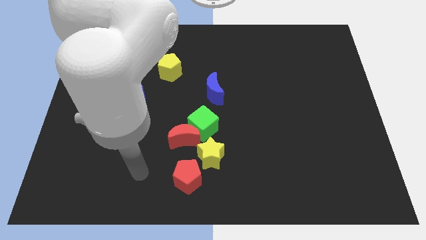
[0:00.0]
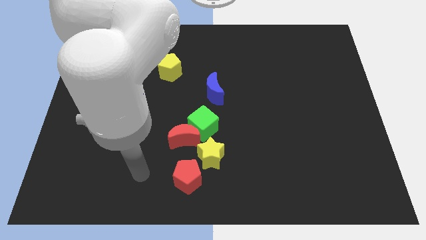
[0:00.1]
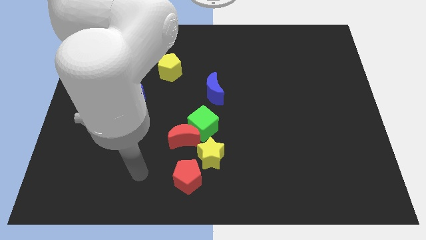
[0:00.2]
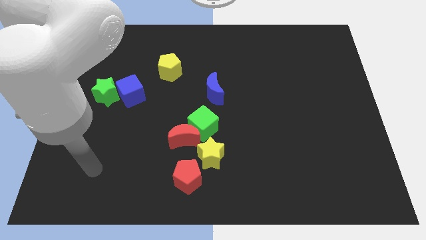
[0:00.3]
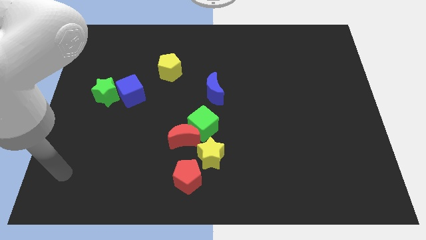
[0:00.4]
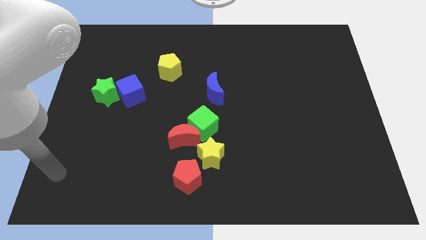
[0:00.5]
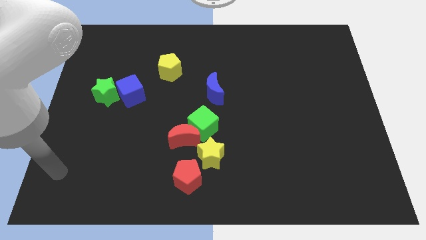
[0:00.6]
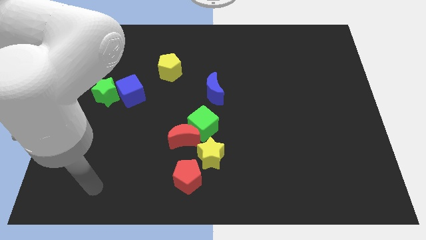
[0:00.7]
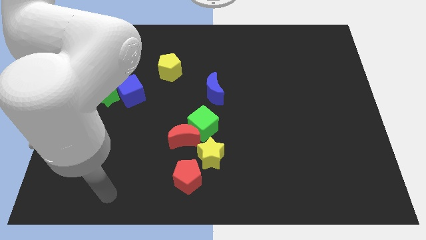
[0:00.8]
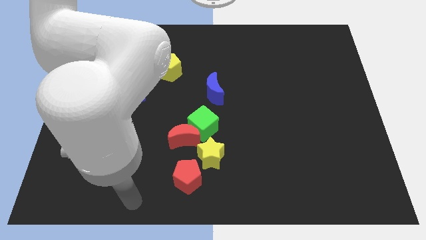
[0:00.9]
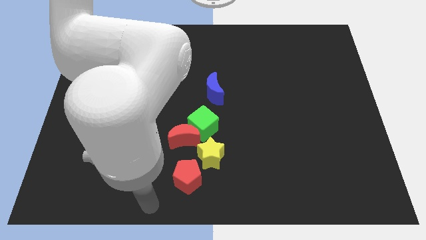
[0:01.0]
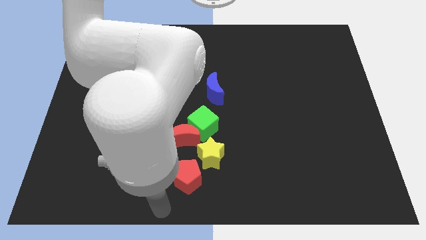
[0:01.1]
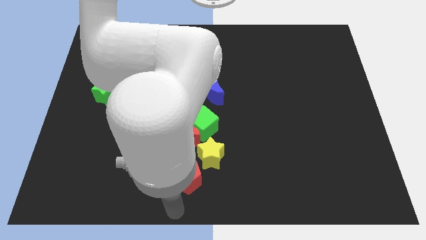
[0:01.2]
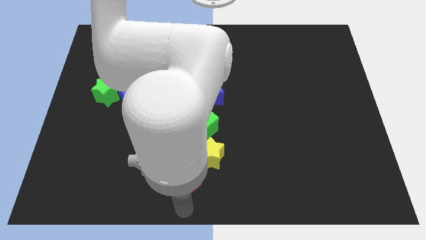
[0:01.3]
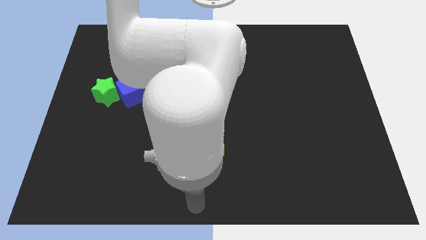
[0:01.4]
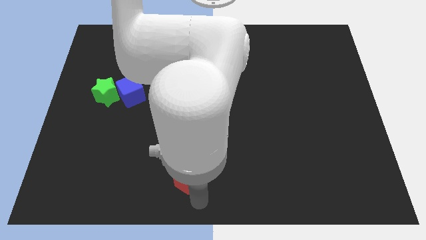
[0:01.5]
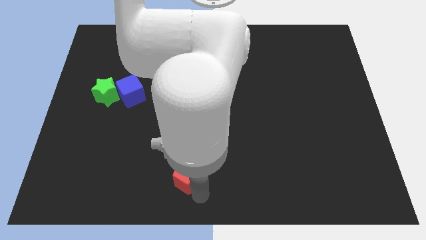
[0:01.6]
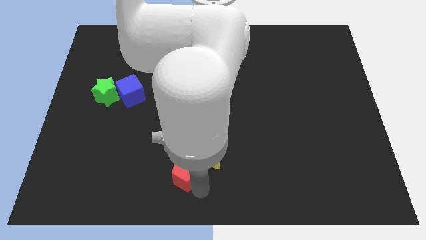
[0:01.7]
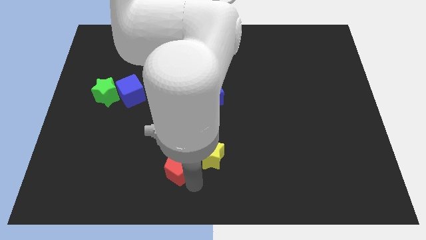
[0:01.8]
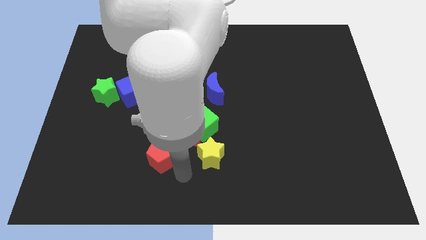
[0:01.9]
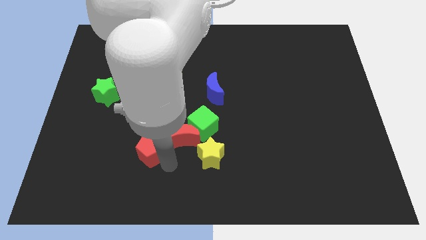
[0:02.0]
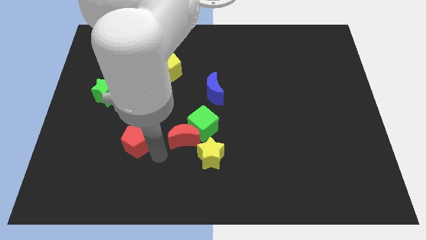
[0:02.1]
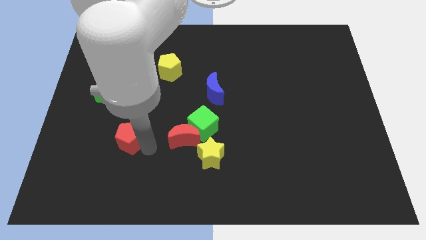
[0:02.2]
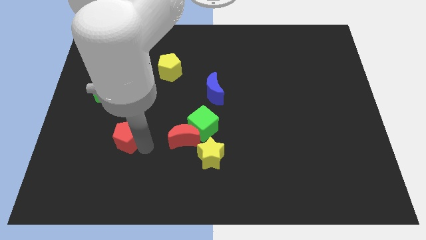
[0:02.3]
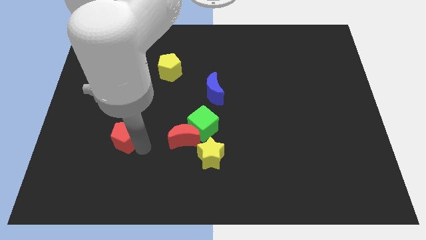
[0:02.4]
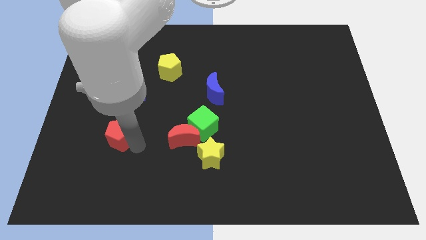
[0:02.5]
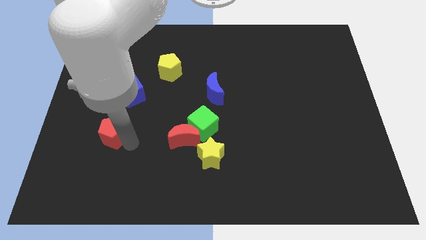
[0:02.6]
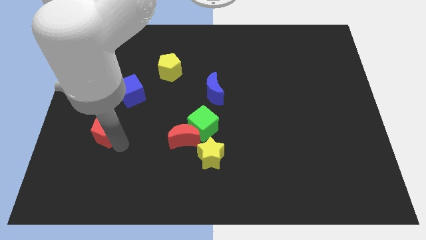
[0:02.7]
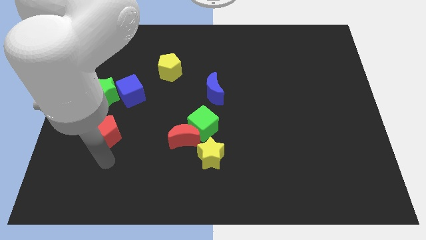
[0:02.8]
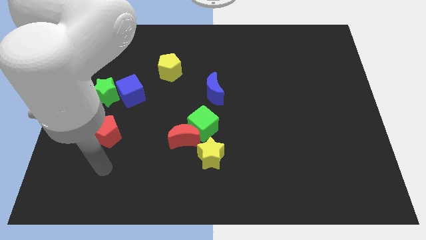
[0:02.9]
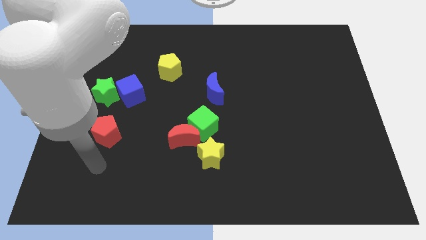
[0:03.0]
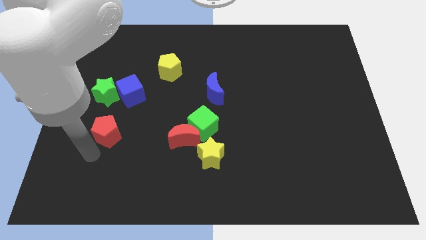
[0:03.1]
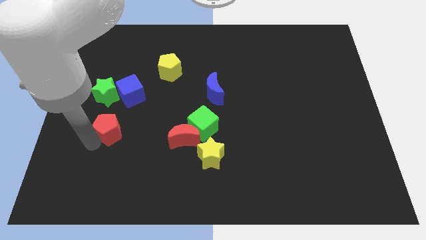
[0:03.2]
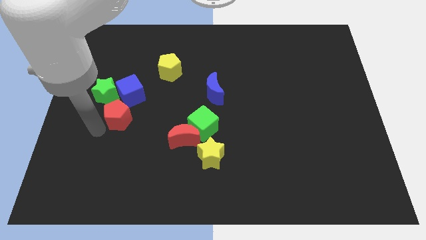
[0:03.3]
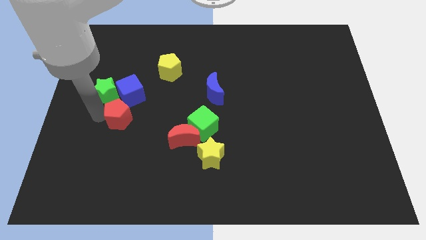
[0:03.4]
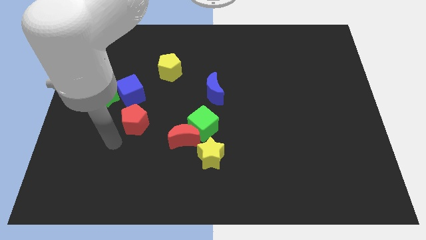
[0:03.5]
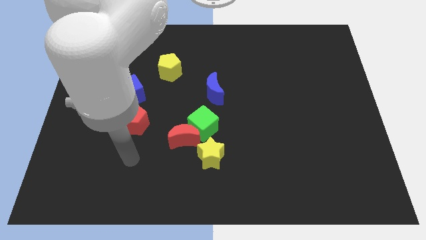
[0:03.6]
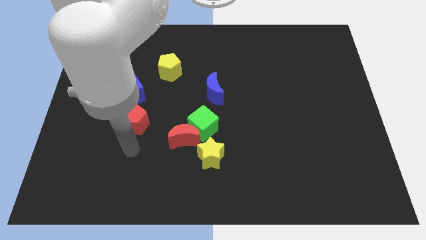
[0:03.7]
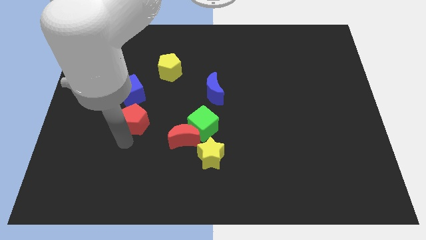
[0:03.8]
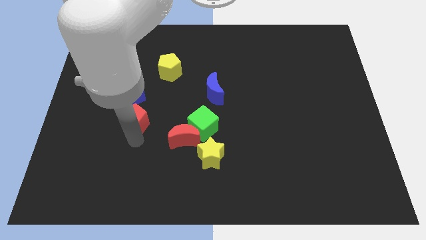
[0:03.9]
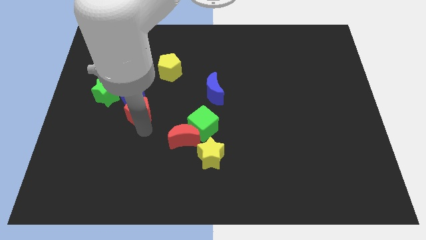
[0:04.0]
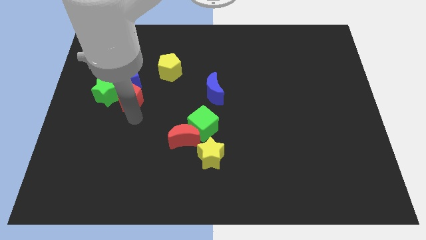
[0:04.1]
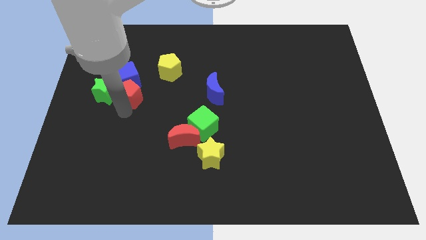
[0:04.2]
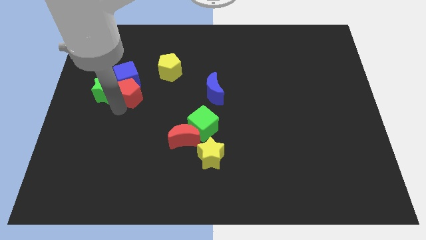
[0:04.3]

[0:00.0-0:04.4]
move the red pentagon next to the green star

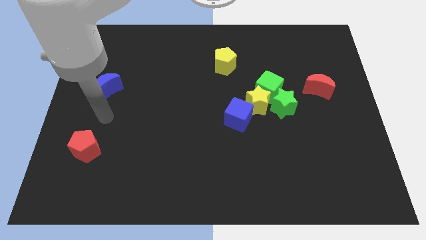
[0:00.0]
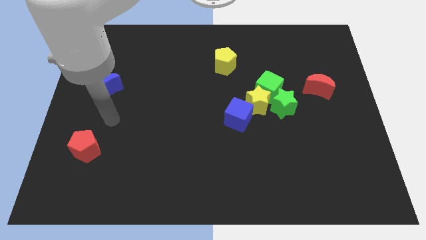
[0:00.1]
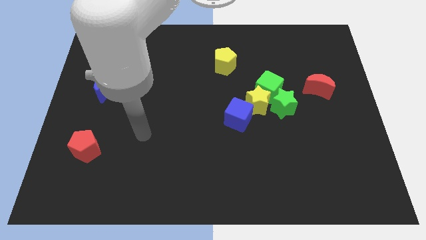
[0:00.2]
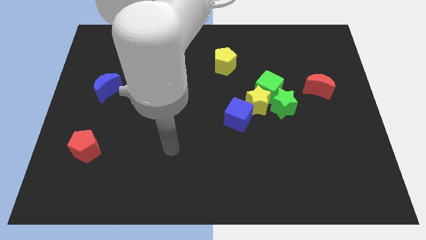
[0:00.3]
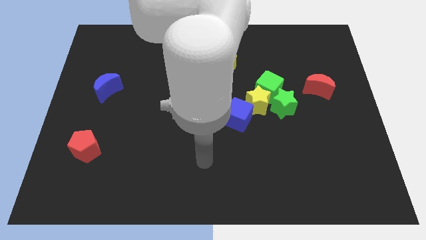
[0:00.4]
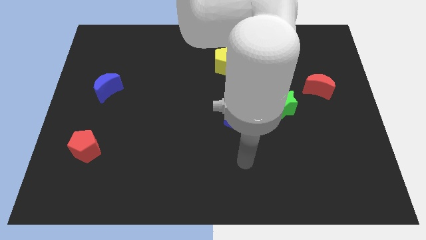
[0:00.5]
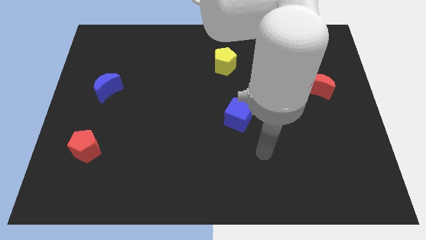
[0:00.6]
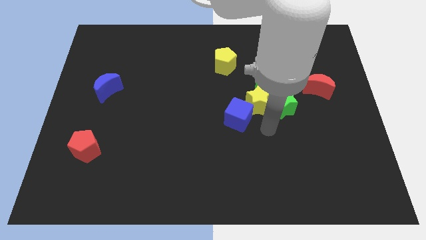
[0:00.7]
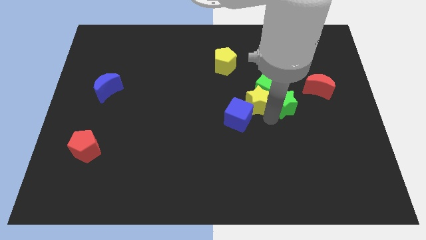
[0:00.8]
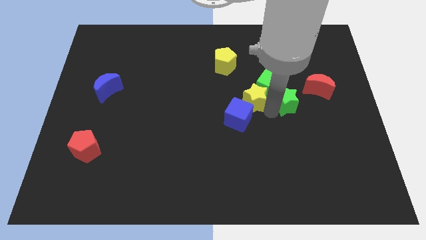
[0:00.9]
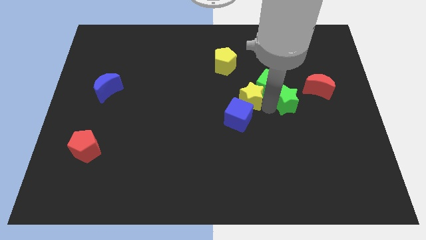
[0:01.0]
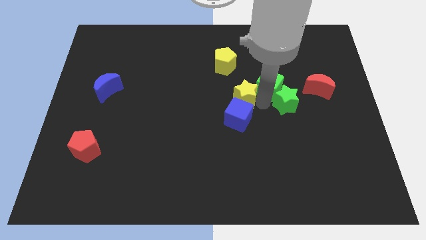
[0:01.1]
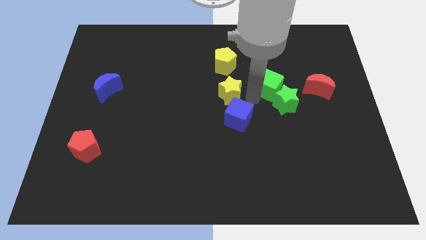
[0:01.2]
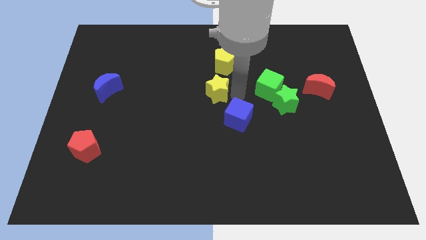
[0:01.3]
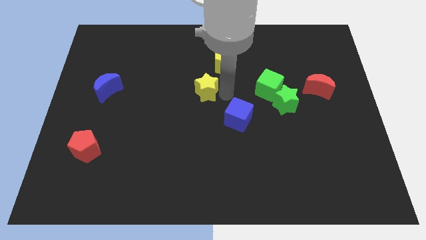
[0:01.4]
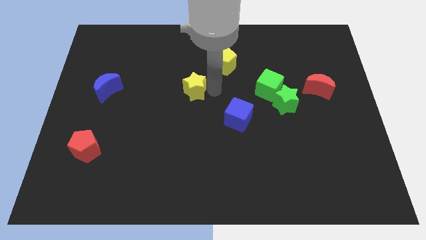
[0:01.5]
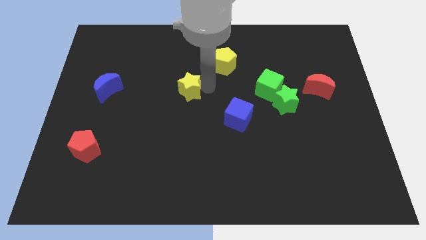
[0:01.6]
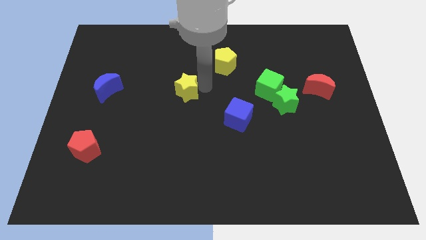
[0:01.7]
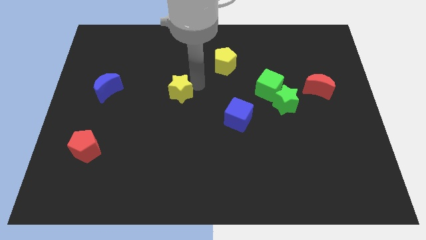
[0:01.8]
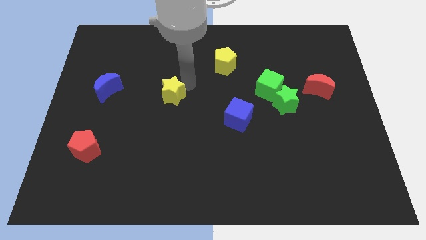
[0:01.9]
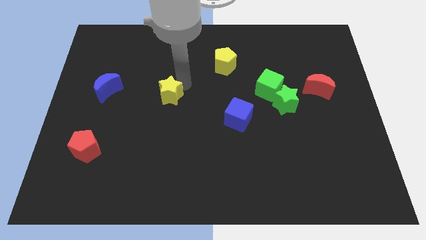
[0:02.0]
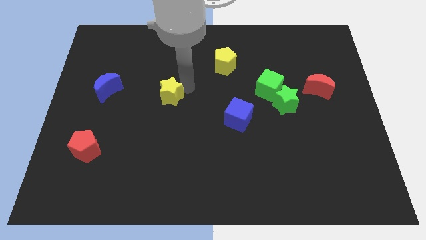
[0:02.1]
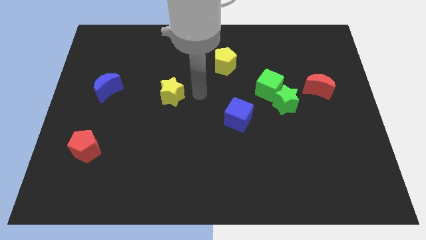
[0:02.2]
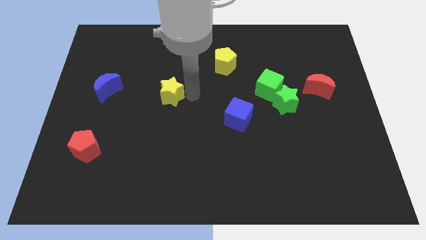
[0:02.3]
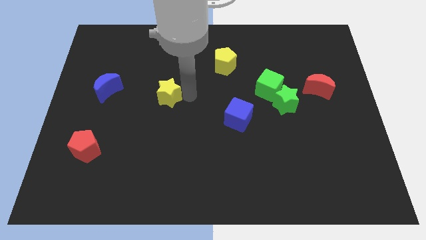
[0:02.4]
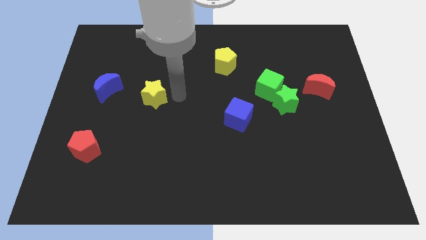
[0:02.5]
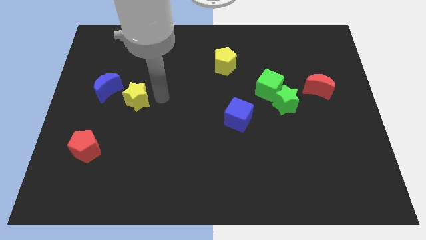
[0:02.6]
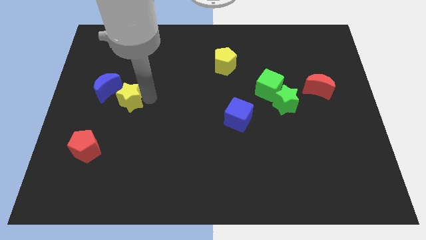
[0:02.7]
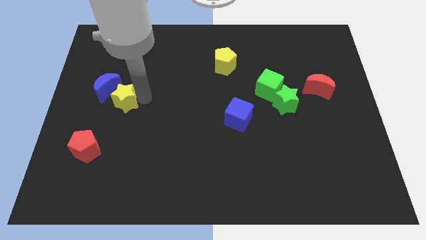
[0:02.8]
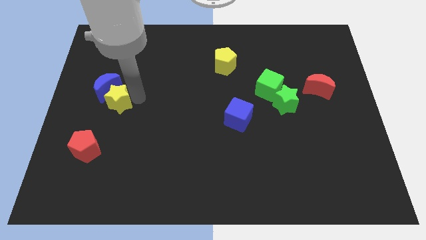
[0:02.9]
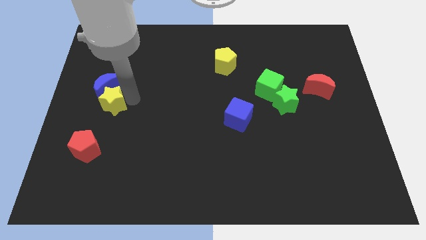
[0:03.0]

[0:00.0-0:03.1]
put the yellow star close to the blue moon

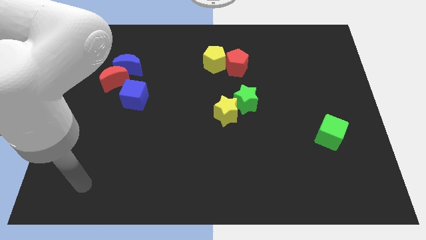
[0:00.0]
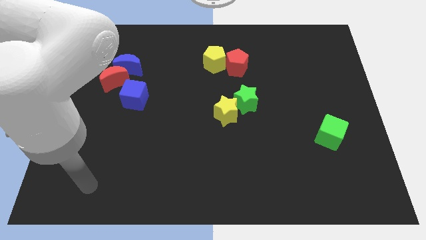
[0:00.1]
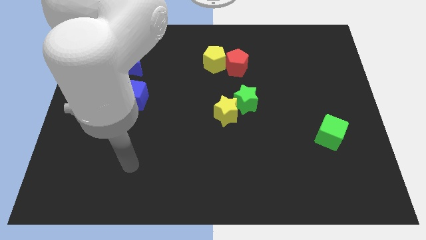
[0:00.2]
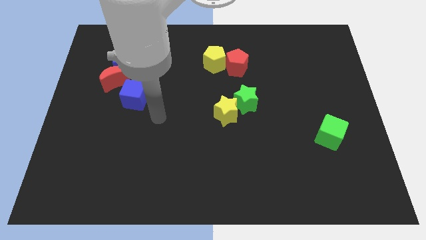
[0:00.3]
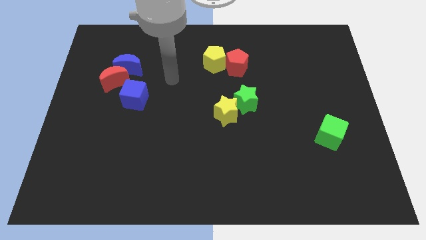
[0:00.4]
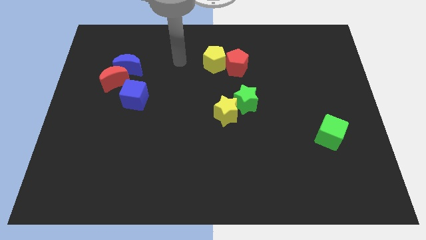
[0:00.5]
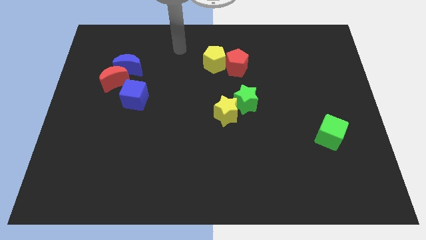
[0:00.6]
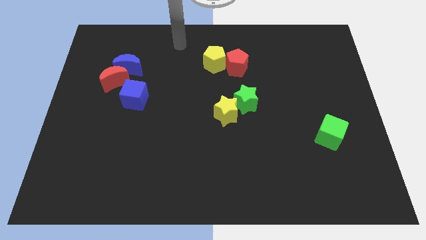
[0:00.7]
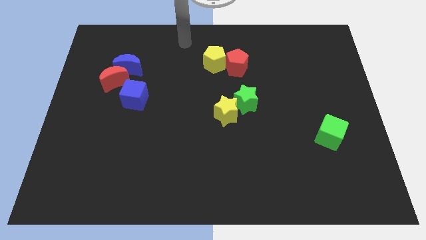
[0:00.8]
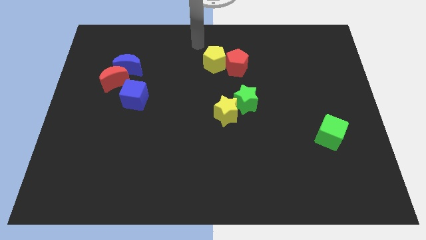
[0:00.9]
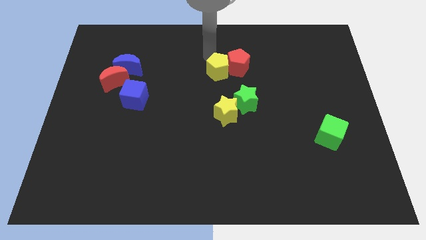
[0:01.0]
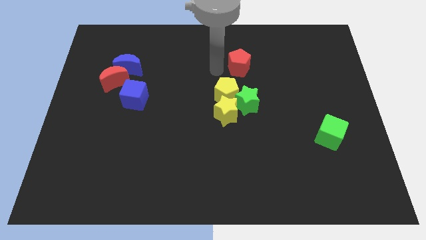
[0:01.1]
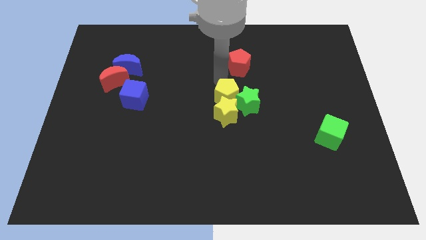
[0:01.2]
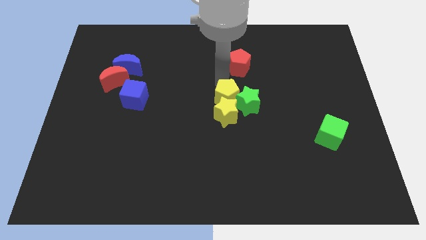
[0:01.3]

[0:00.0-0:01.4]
put the yellow pentagon towards the yellow star
